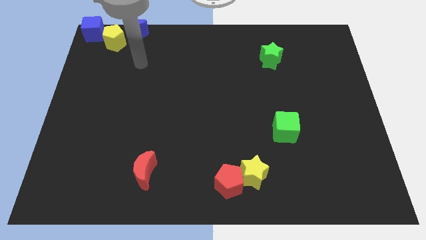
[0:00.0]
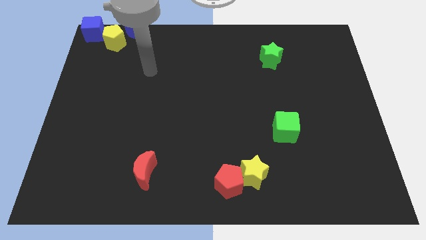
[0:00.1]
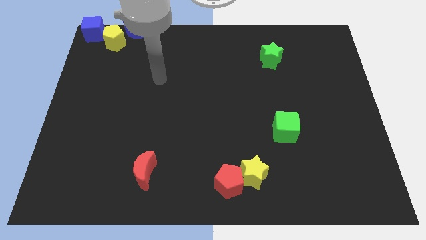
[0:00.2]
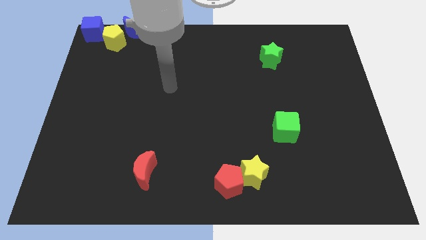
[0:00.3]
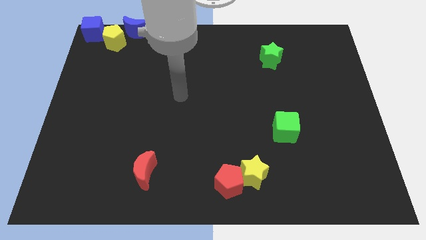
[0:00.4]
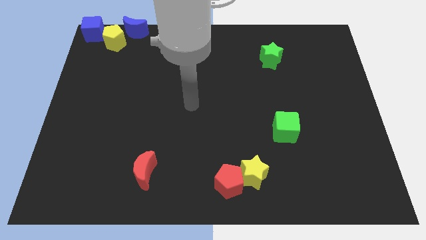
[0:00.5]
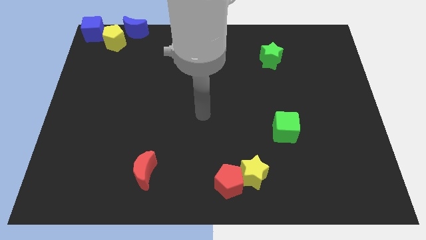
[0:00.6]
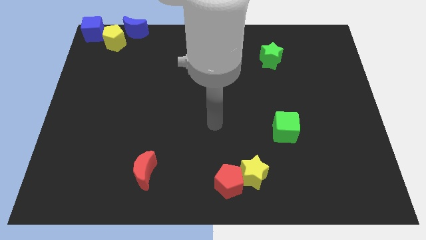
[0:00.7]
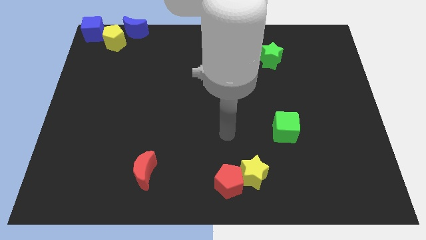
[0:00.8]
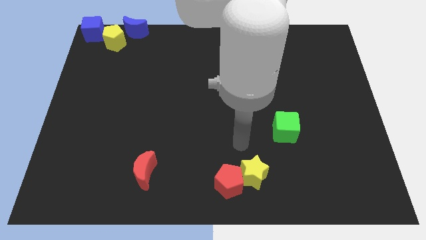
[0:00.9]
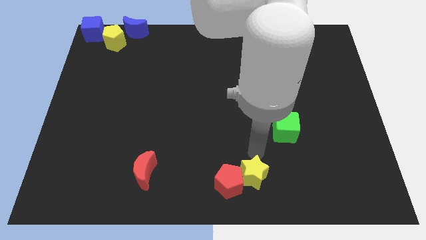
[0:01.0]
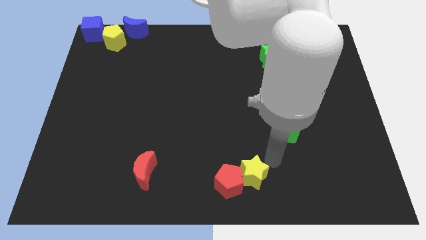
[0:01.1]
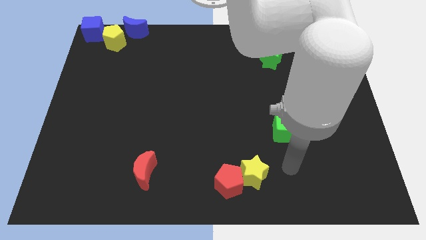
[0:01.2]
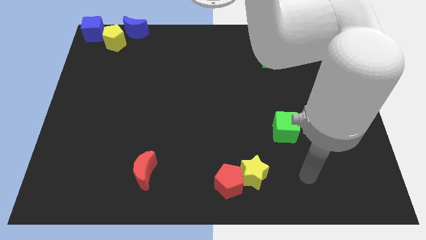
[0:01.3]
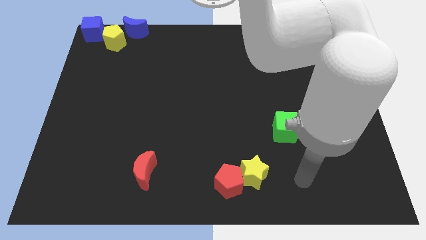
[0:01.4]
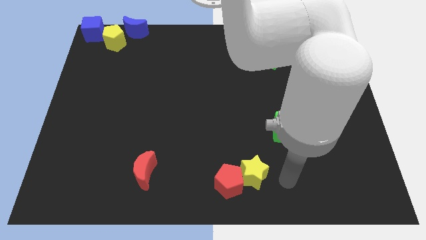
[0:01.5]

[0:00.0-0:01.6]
move yourself away from the yellow pentagon

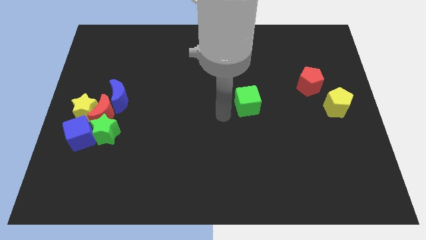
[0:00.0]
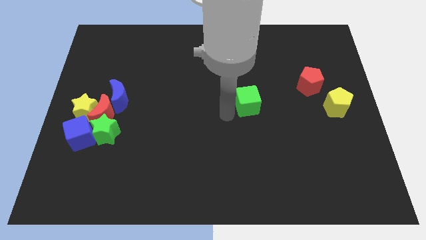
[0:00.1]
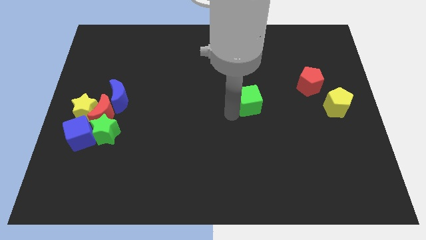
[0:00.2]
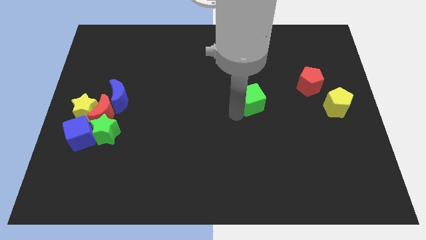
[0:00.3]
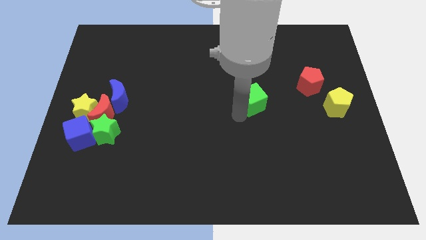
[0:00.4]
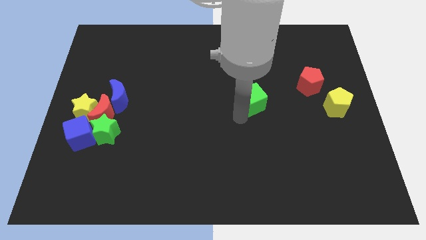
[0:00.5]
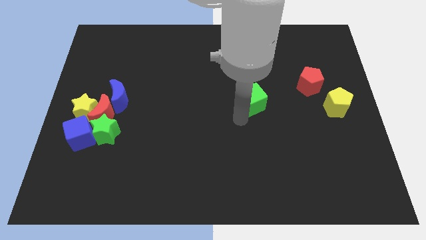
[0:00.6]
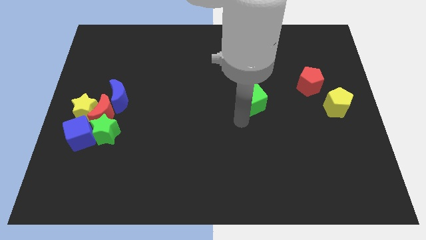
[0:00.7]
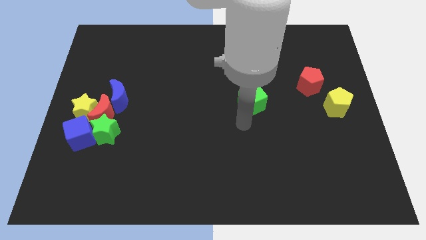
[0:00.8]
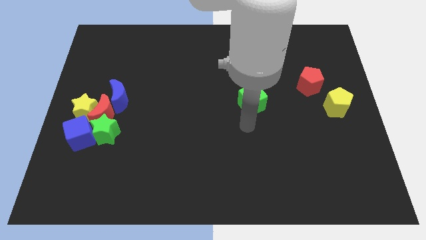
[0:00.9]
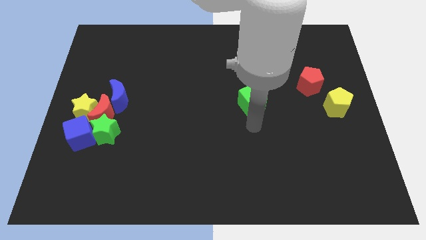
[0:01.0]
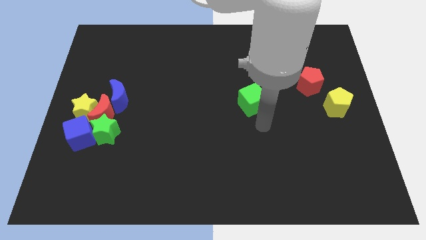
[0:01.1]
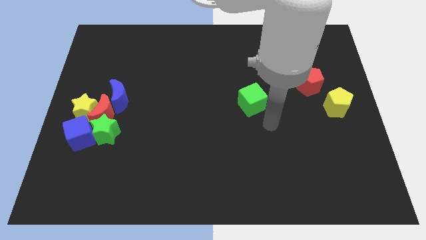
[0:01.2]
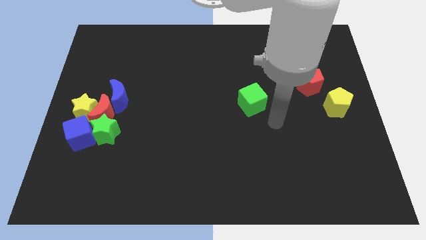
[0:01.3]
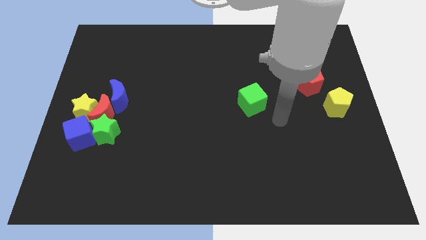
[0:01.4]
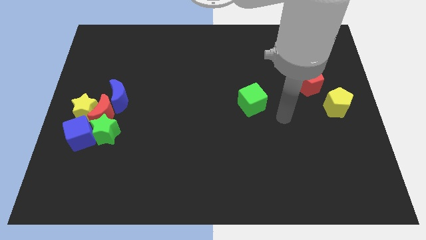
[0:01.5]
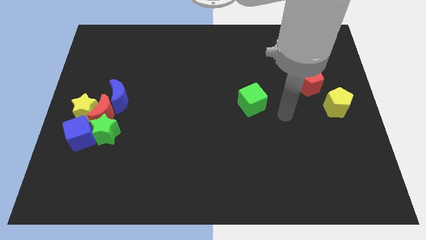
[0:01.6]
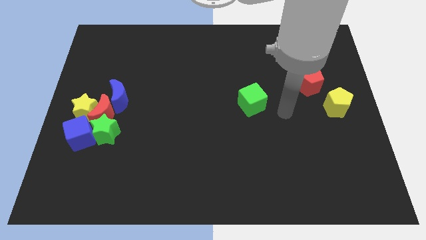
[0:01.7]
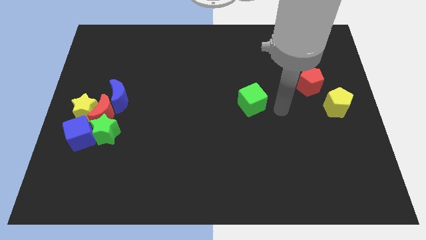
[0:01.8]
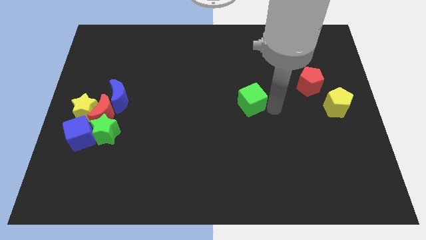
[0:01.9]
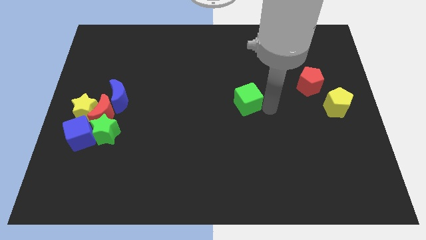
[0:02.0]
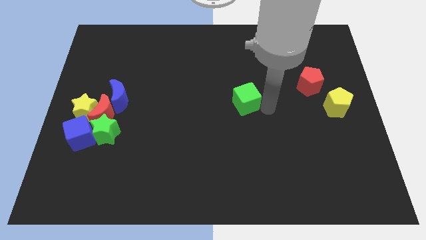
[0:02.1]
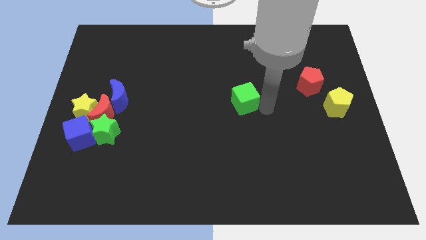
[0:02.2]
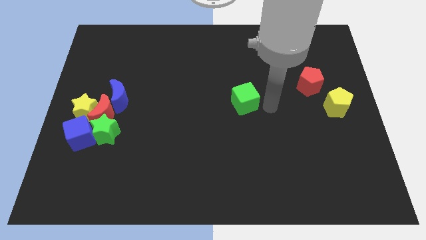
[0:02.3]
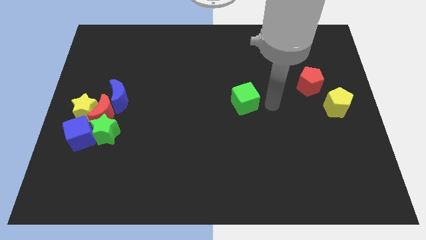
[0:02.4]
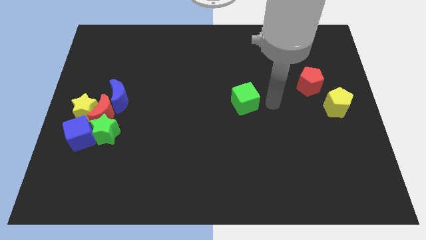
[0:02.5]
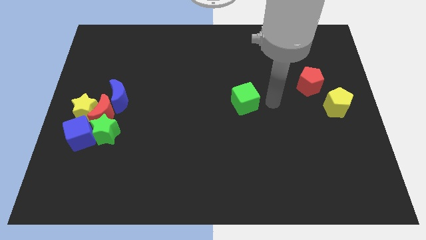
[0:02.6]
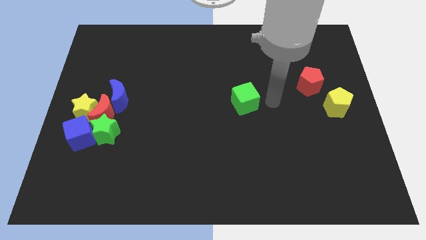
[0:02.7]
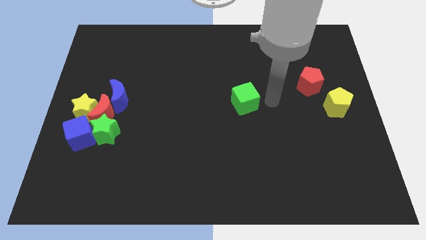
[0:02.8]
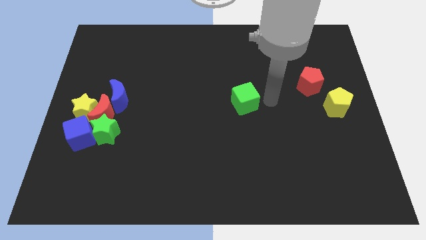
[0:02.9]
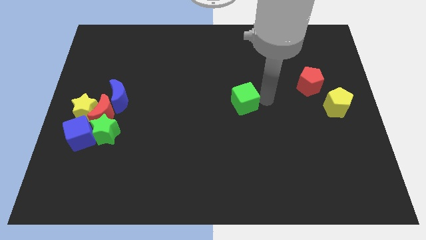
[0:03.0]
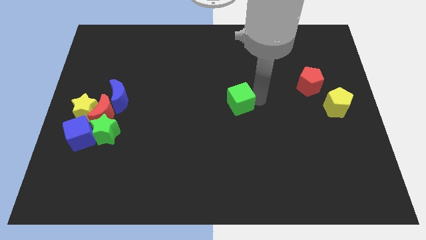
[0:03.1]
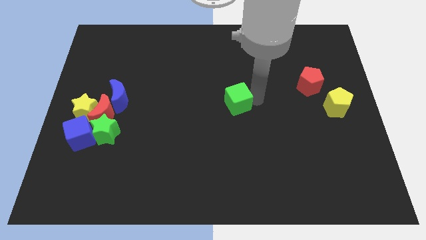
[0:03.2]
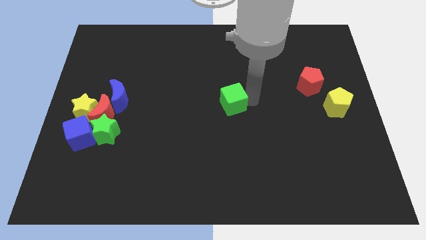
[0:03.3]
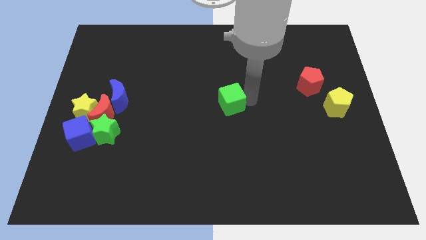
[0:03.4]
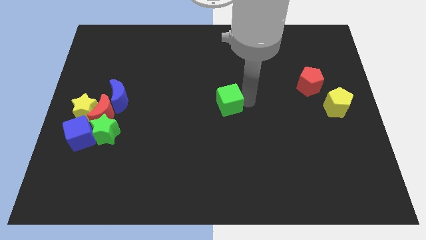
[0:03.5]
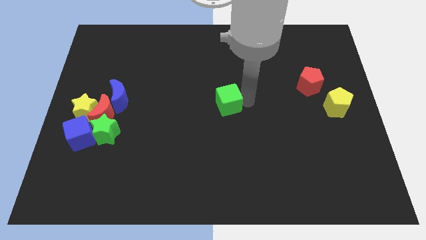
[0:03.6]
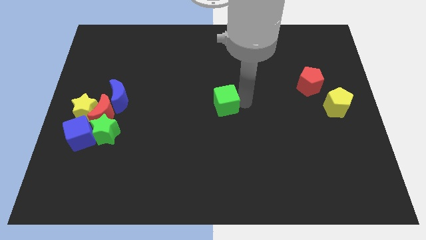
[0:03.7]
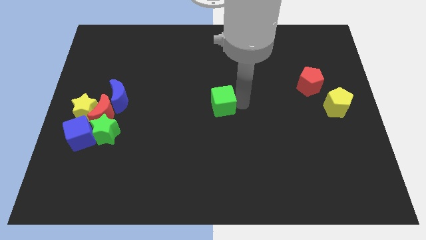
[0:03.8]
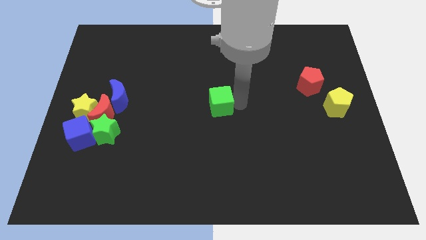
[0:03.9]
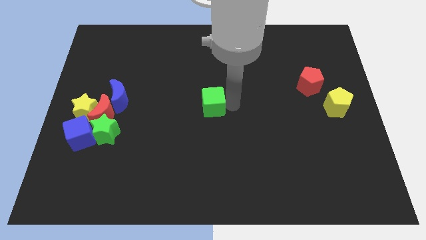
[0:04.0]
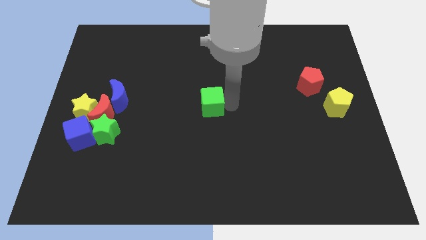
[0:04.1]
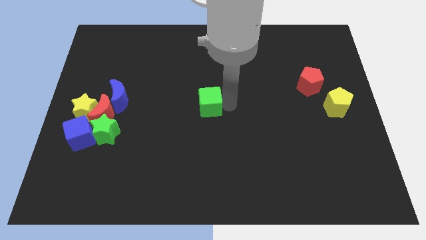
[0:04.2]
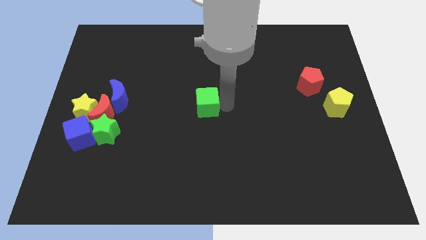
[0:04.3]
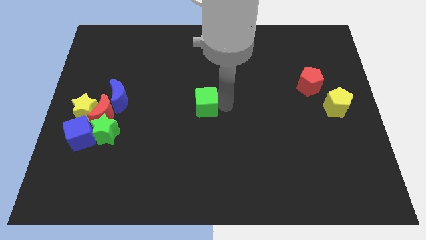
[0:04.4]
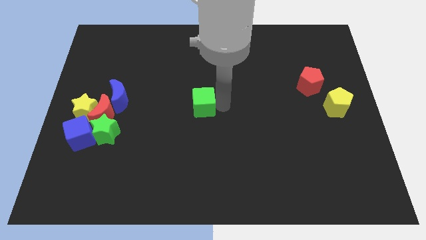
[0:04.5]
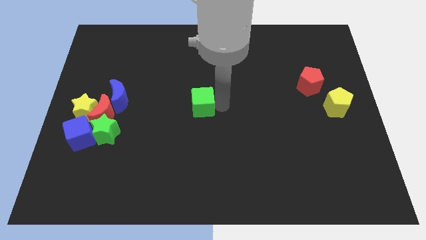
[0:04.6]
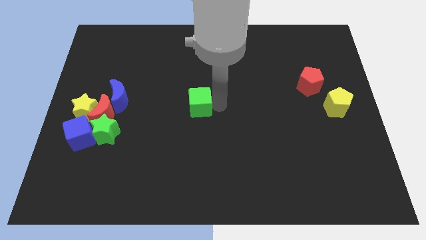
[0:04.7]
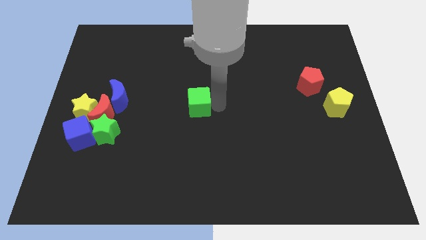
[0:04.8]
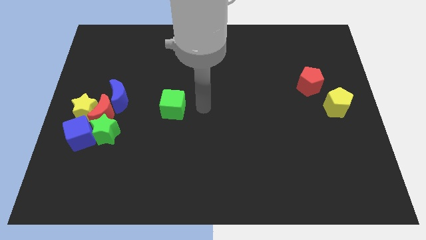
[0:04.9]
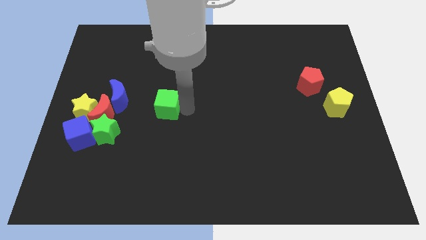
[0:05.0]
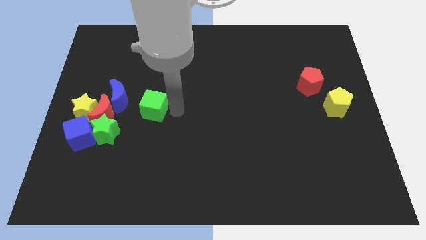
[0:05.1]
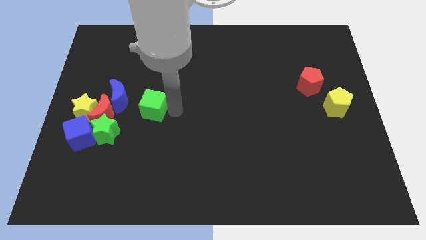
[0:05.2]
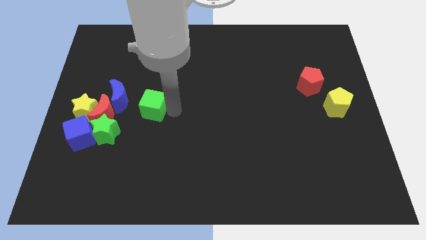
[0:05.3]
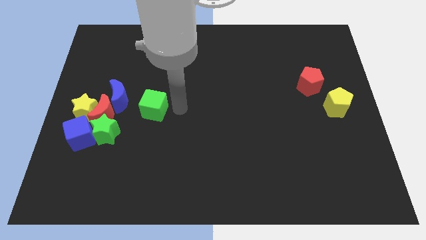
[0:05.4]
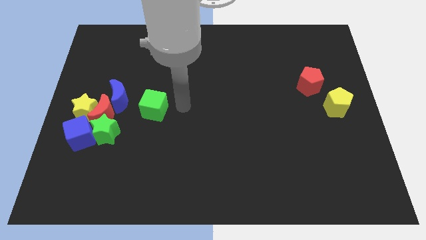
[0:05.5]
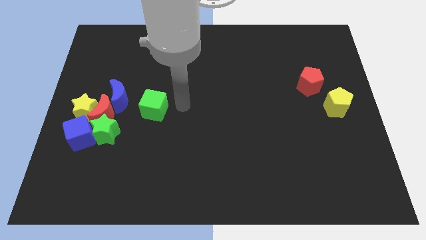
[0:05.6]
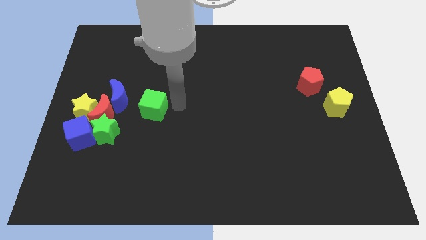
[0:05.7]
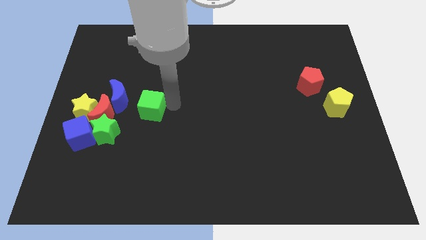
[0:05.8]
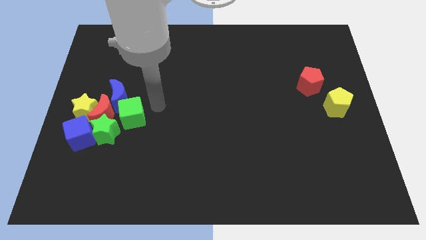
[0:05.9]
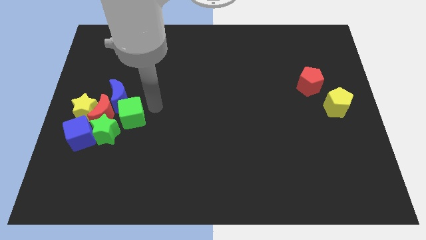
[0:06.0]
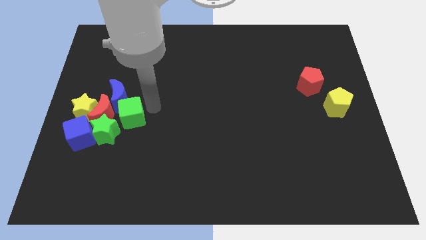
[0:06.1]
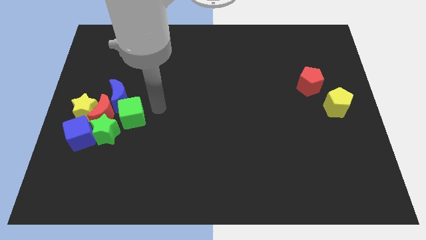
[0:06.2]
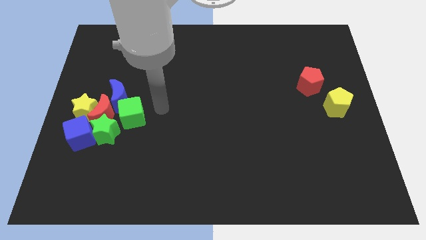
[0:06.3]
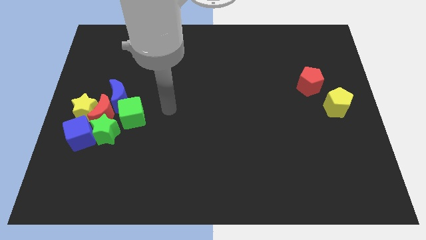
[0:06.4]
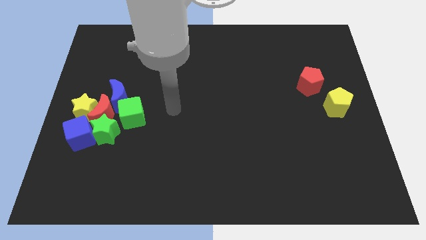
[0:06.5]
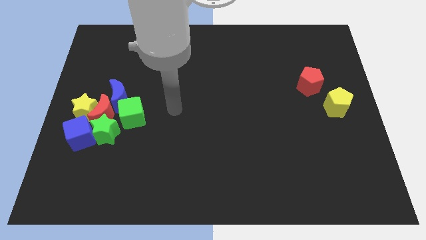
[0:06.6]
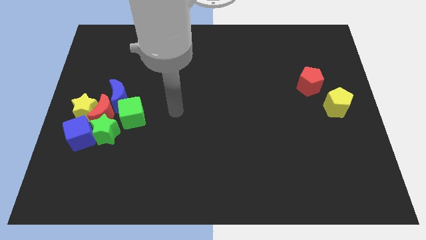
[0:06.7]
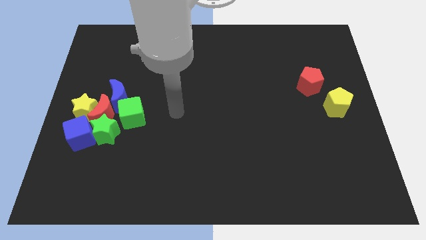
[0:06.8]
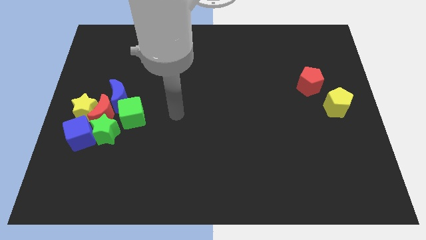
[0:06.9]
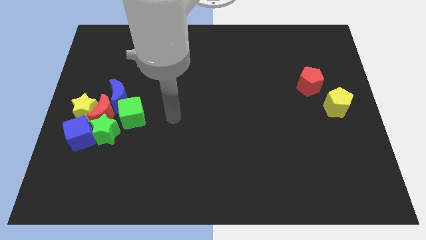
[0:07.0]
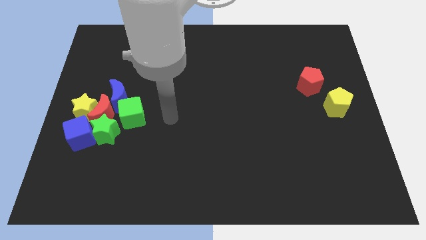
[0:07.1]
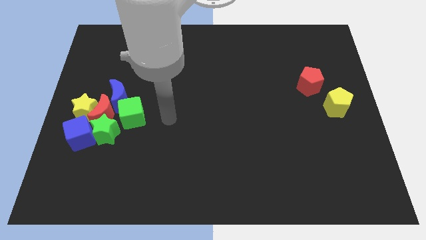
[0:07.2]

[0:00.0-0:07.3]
place the green cube to the right side of red crescent

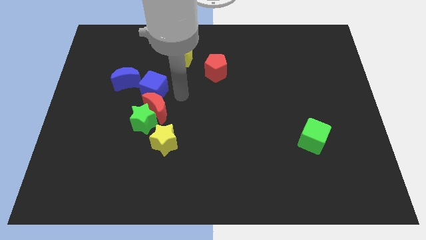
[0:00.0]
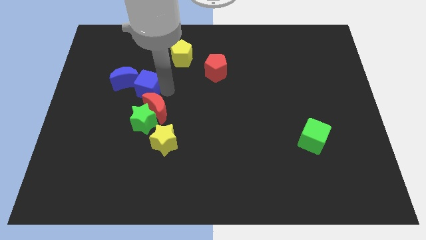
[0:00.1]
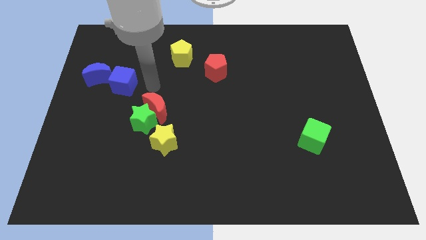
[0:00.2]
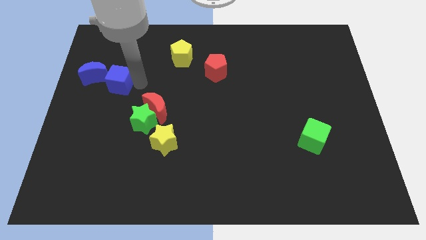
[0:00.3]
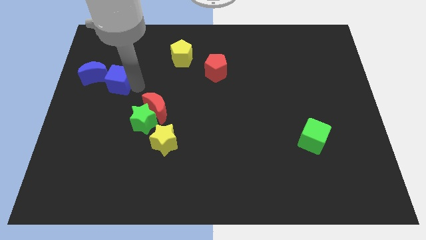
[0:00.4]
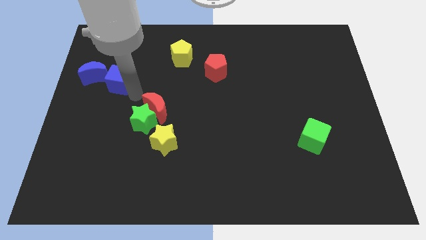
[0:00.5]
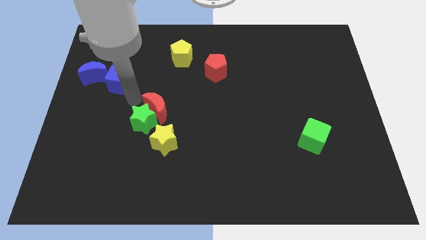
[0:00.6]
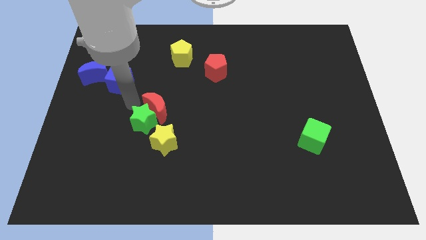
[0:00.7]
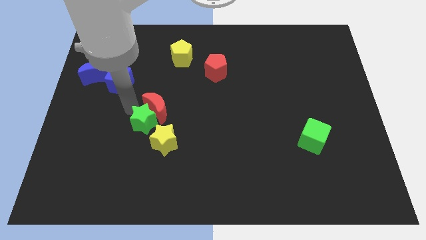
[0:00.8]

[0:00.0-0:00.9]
slightly push the blue blocks towards the left side
